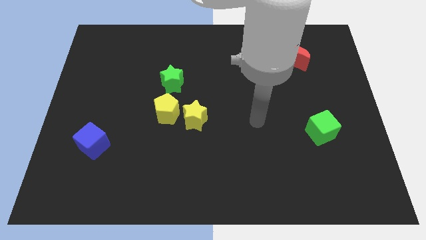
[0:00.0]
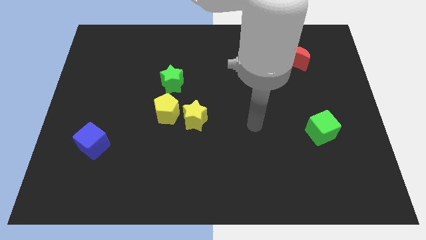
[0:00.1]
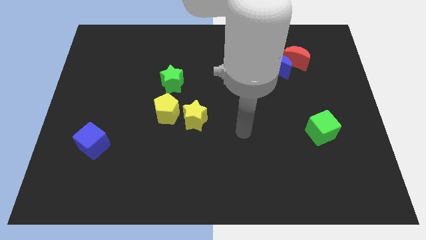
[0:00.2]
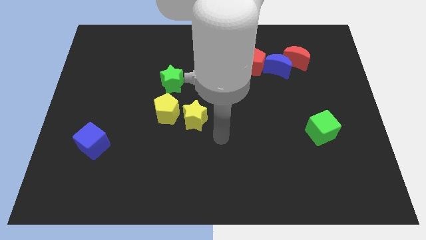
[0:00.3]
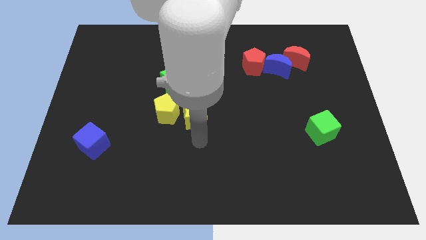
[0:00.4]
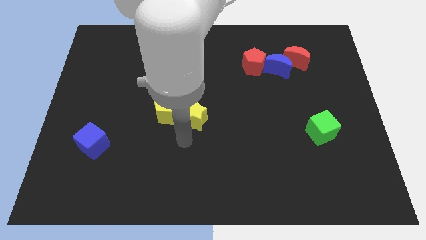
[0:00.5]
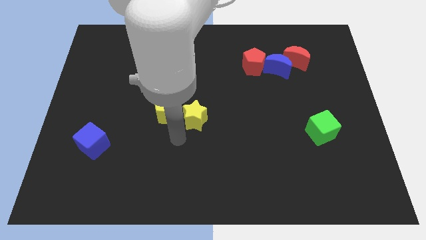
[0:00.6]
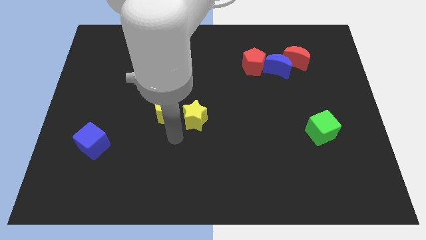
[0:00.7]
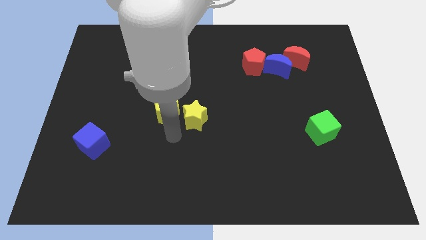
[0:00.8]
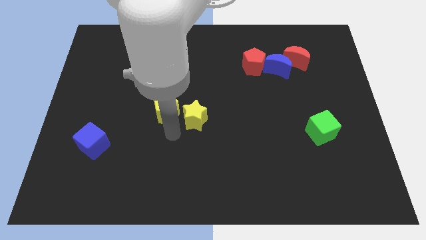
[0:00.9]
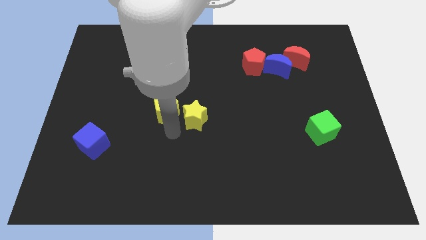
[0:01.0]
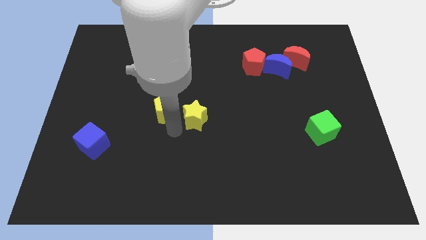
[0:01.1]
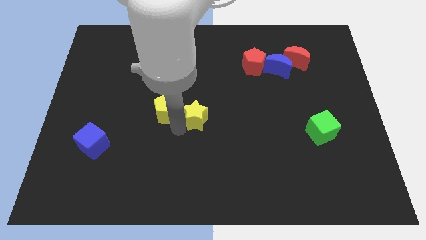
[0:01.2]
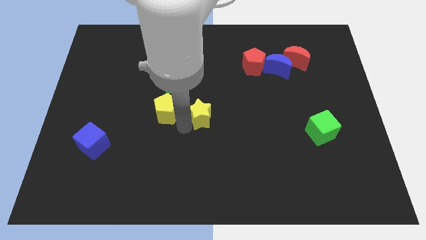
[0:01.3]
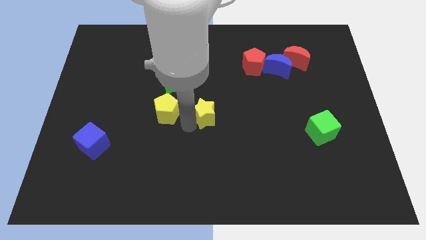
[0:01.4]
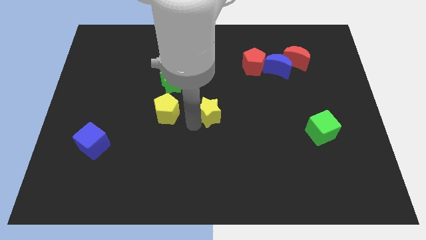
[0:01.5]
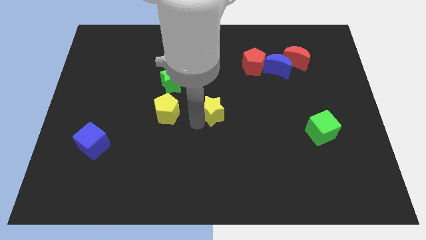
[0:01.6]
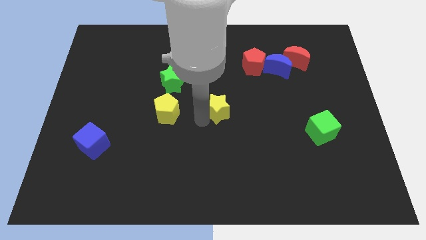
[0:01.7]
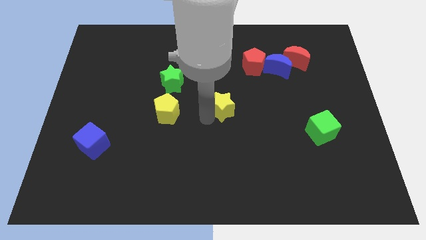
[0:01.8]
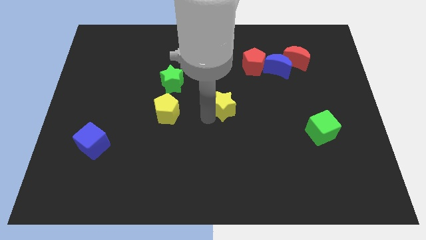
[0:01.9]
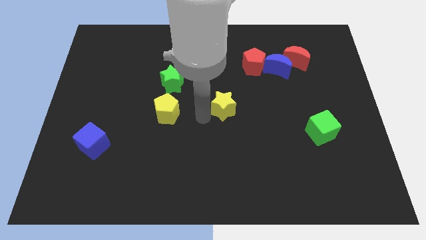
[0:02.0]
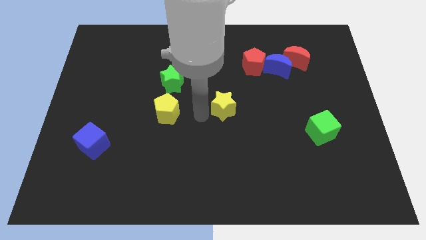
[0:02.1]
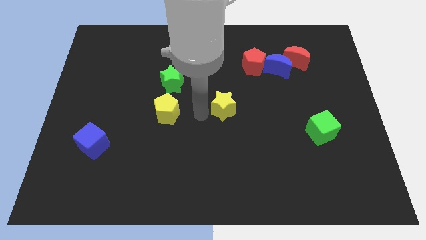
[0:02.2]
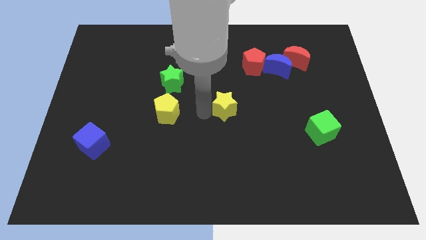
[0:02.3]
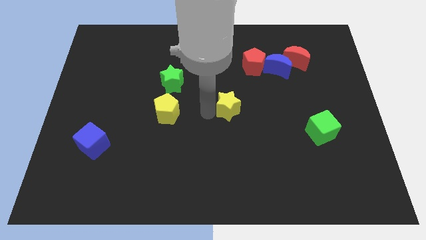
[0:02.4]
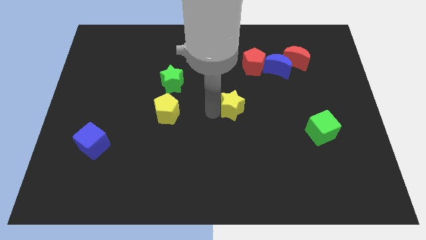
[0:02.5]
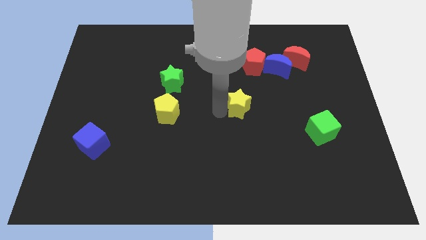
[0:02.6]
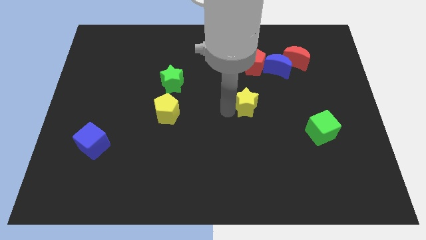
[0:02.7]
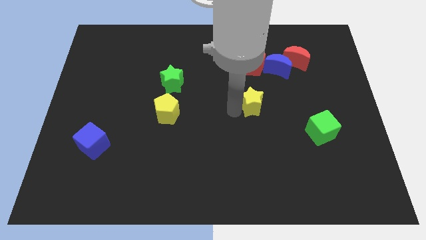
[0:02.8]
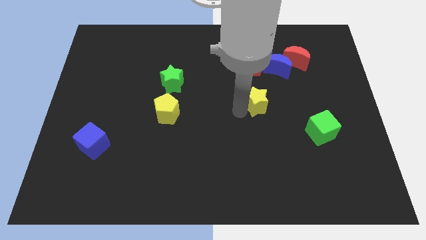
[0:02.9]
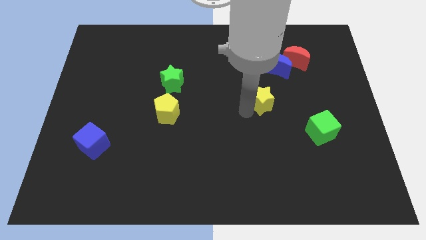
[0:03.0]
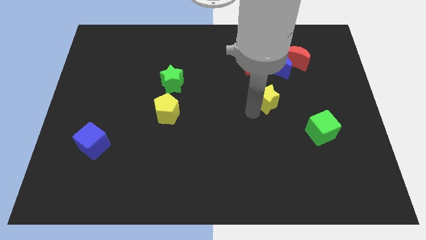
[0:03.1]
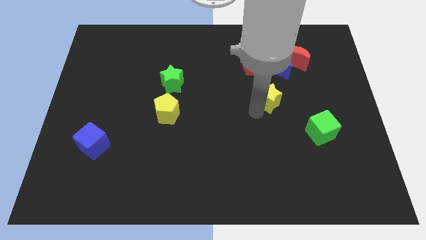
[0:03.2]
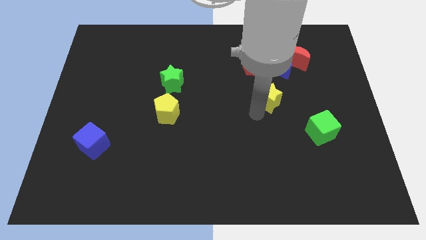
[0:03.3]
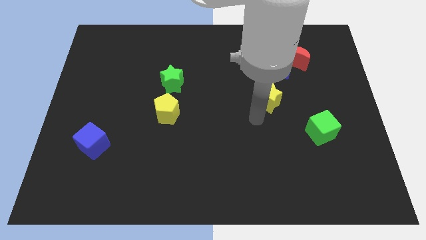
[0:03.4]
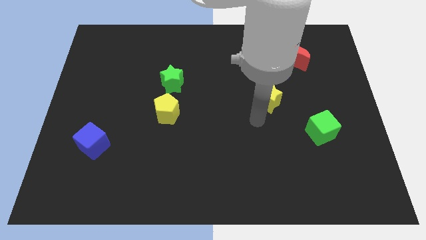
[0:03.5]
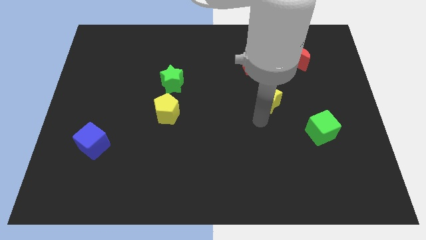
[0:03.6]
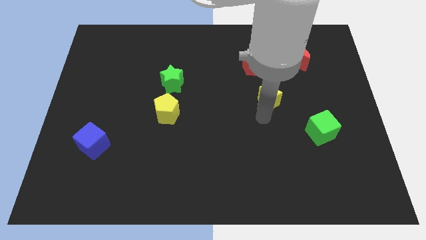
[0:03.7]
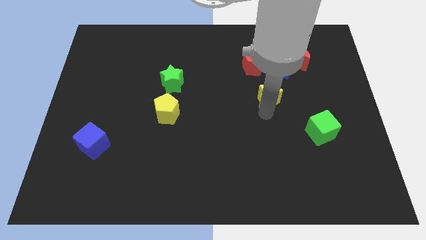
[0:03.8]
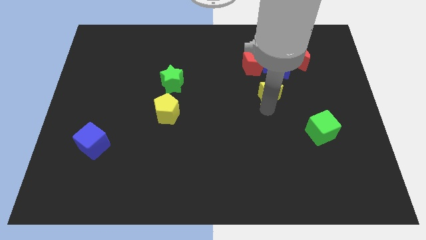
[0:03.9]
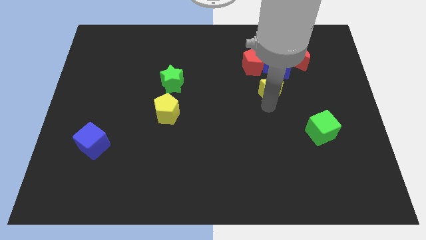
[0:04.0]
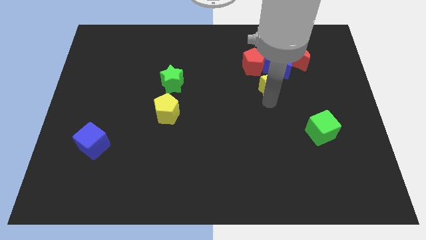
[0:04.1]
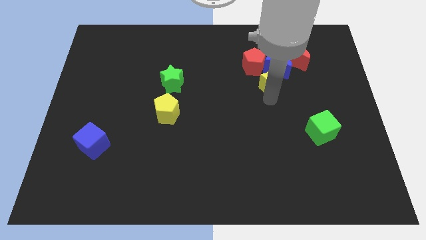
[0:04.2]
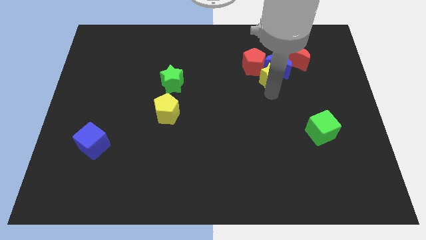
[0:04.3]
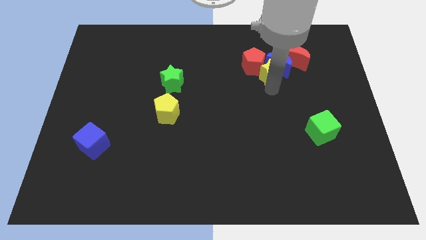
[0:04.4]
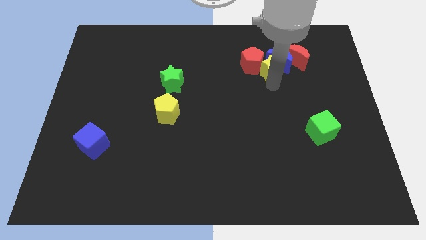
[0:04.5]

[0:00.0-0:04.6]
slide the yellow star next to the blue moon

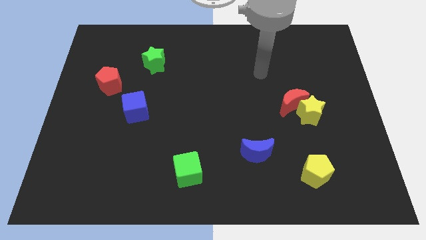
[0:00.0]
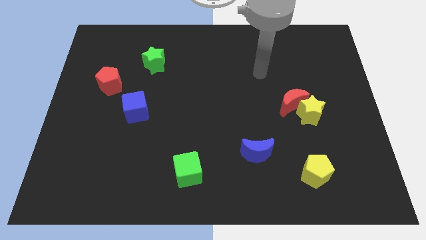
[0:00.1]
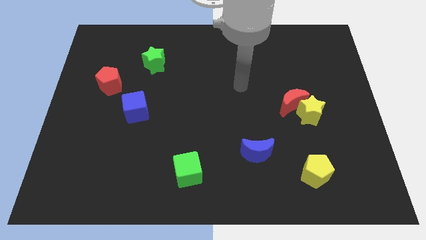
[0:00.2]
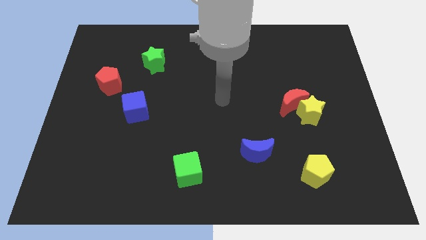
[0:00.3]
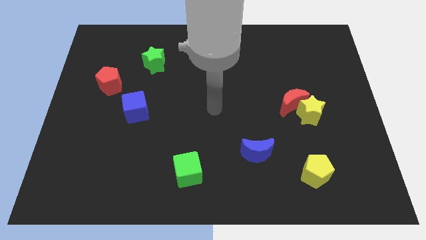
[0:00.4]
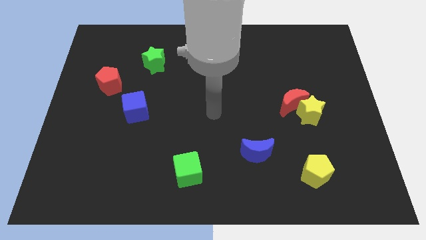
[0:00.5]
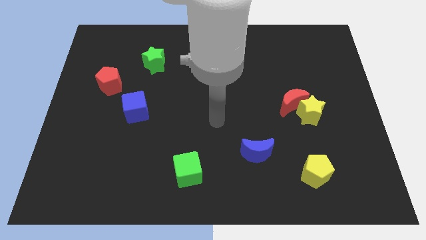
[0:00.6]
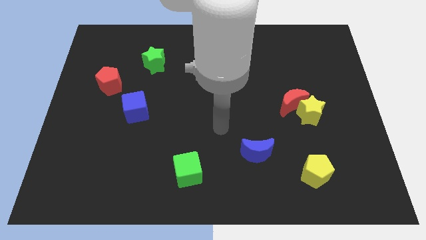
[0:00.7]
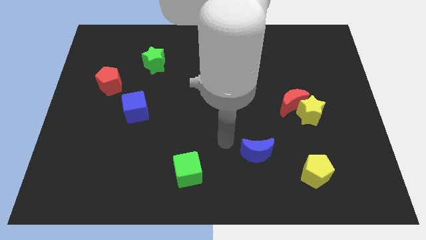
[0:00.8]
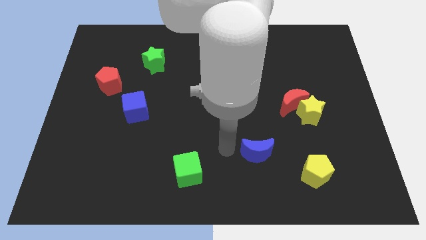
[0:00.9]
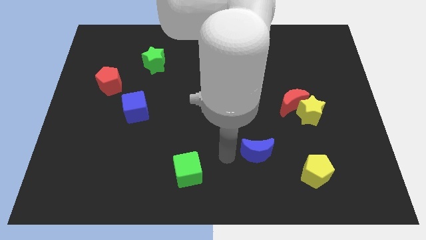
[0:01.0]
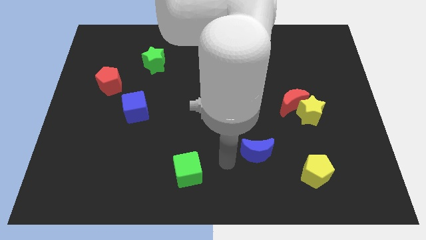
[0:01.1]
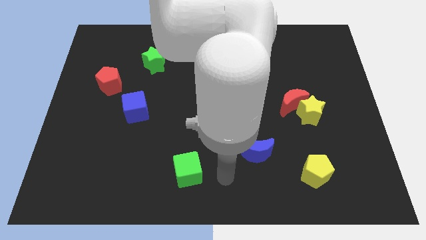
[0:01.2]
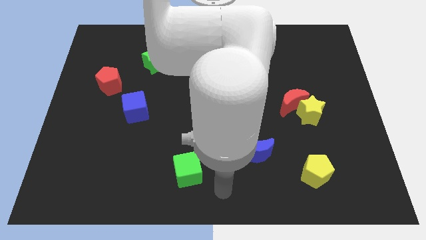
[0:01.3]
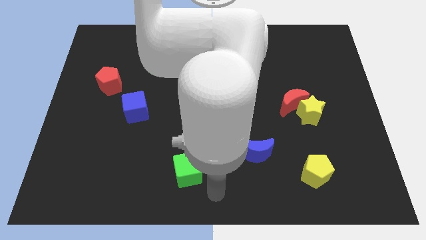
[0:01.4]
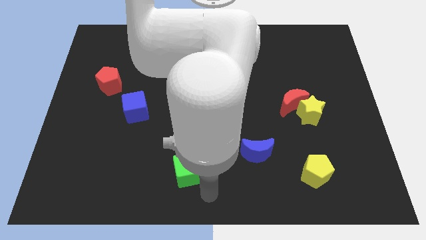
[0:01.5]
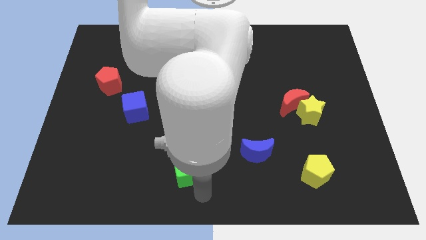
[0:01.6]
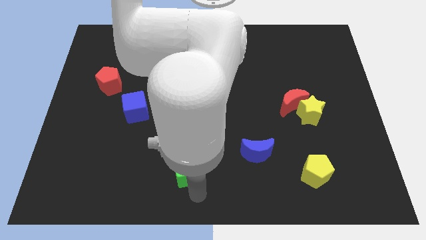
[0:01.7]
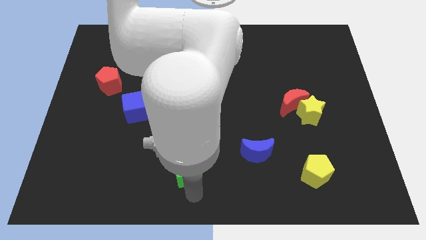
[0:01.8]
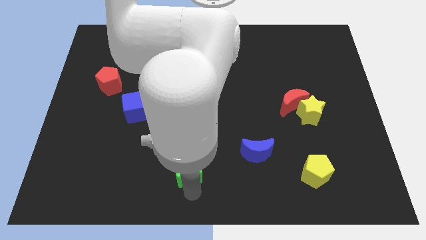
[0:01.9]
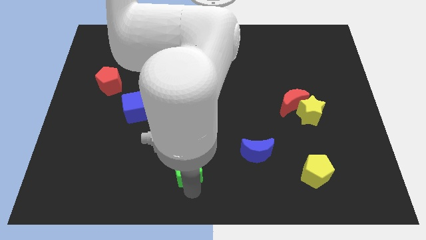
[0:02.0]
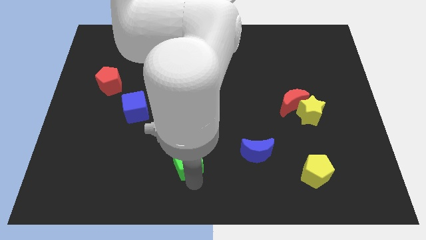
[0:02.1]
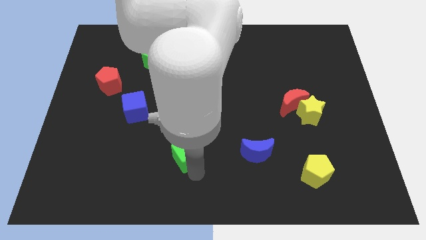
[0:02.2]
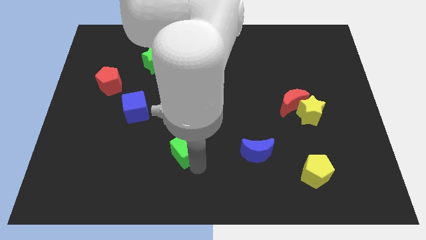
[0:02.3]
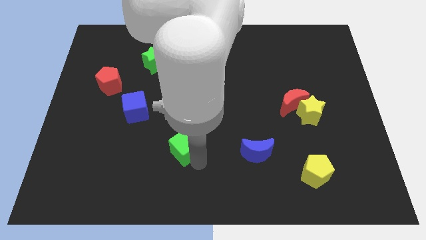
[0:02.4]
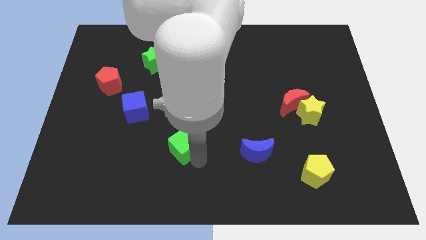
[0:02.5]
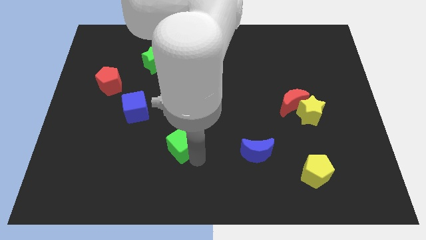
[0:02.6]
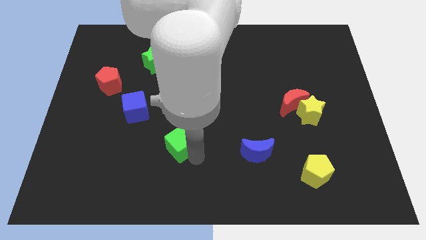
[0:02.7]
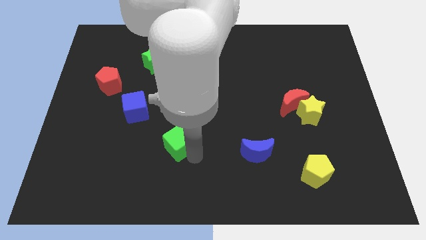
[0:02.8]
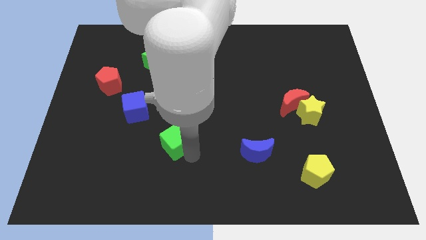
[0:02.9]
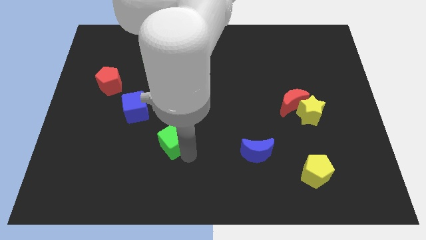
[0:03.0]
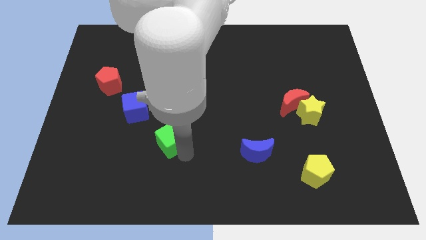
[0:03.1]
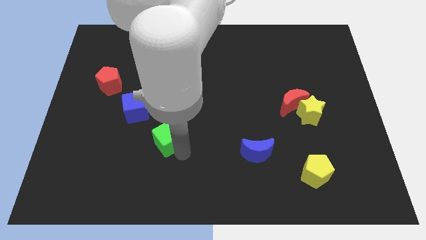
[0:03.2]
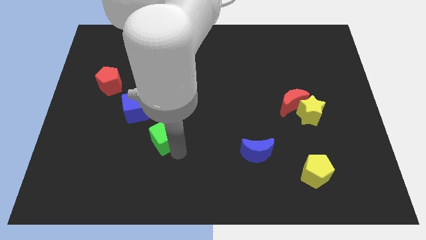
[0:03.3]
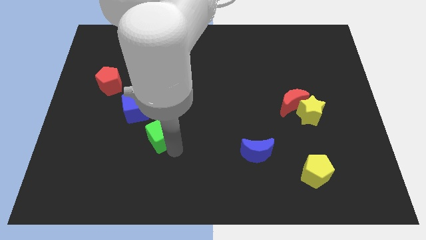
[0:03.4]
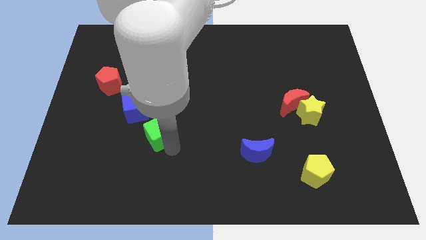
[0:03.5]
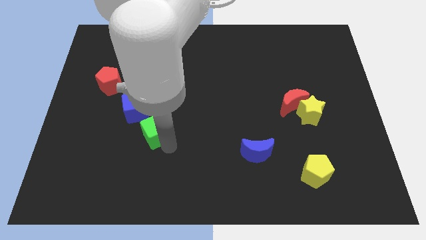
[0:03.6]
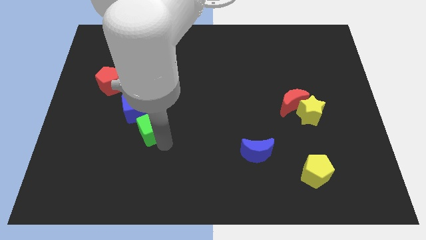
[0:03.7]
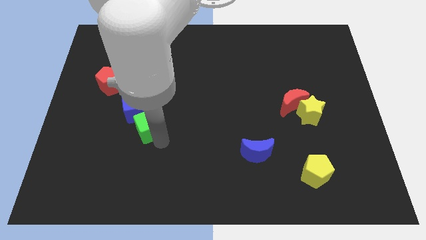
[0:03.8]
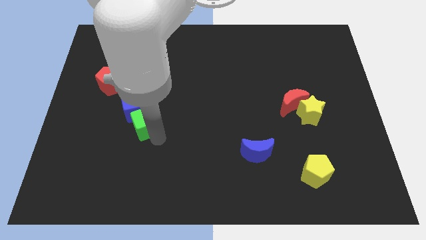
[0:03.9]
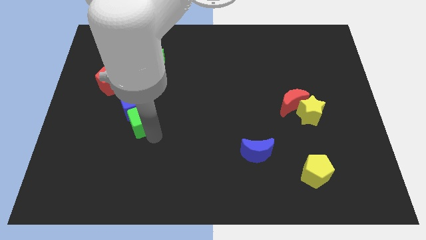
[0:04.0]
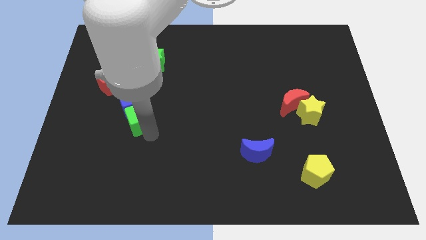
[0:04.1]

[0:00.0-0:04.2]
slide the green cube to the blue cube
